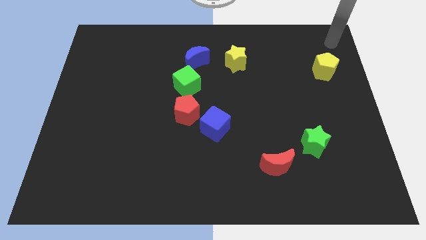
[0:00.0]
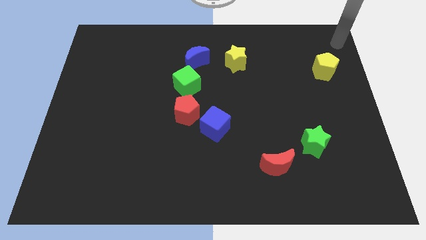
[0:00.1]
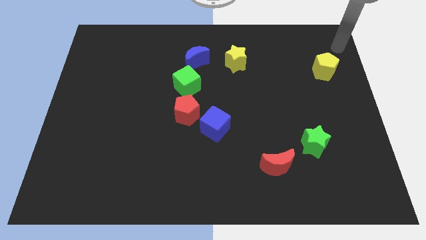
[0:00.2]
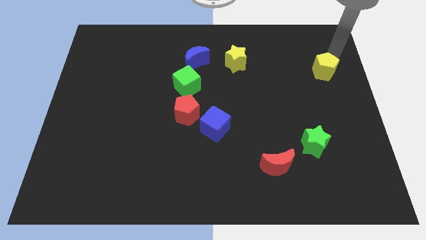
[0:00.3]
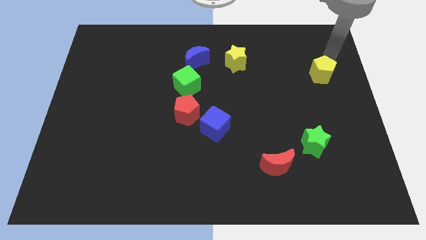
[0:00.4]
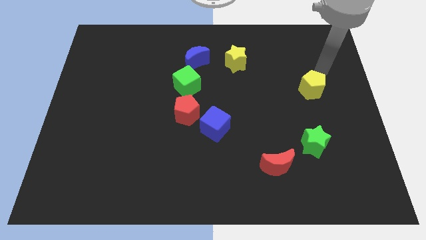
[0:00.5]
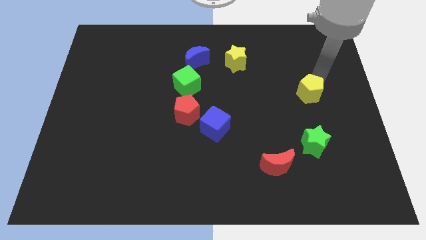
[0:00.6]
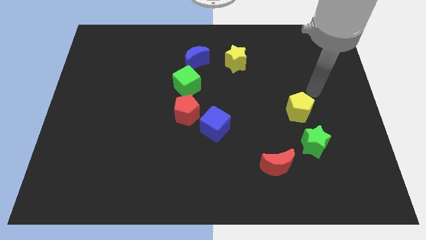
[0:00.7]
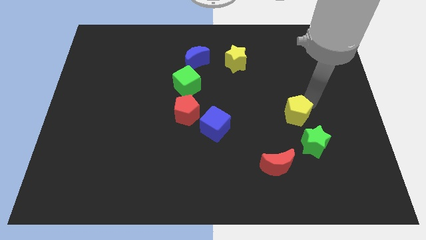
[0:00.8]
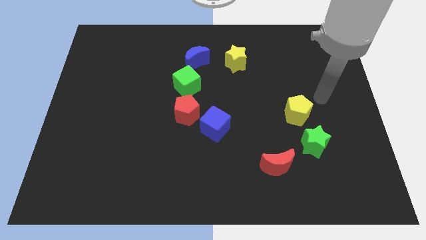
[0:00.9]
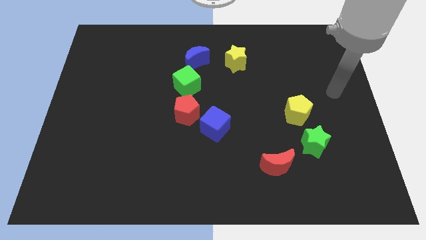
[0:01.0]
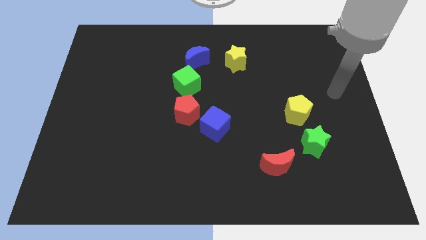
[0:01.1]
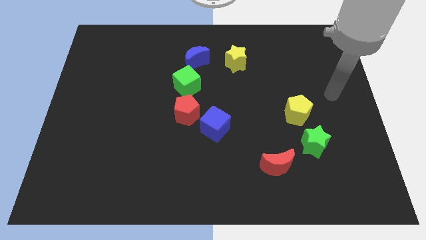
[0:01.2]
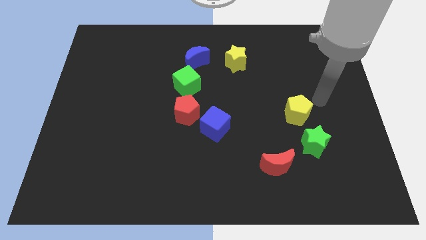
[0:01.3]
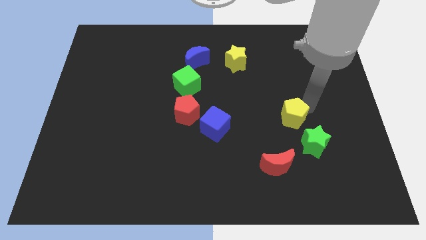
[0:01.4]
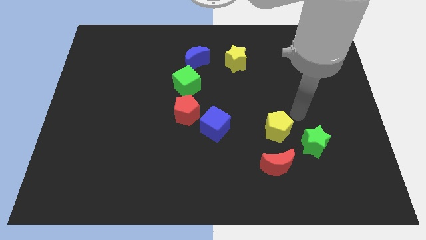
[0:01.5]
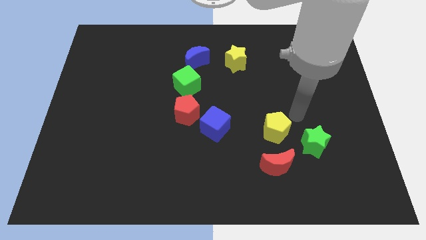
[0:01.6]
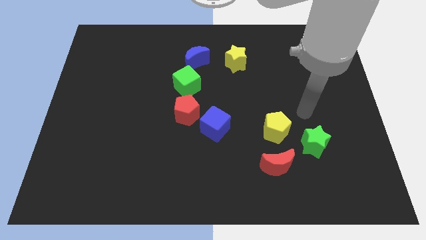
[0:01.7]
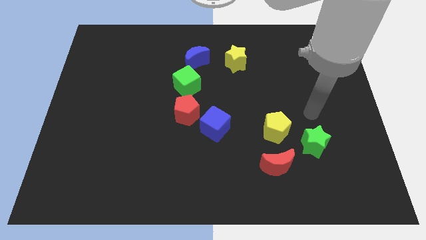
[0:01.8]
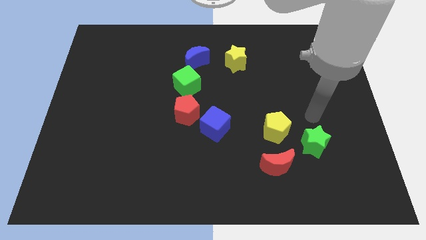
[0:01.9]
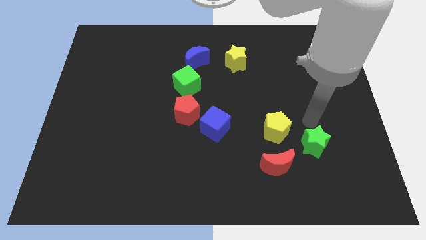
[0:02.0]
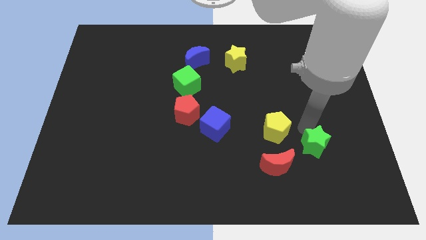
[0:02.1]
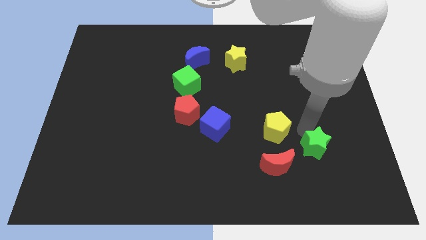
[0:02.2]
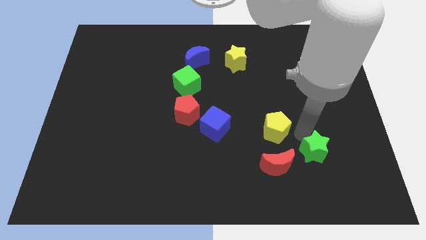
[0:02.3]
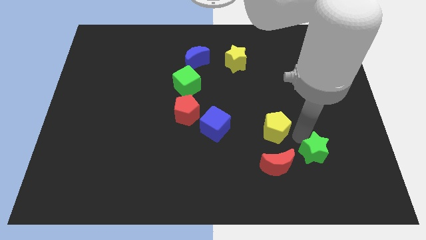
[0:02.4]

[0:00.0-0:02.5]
push the yellow pentagon right to the blue cube

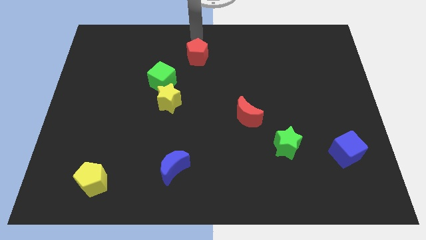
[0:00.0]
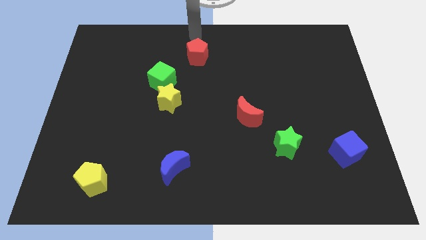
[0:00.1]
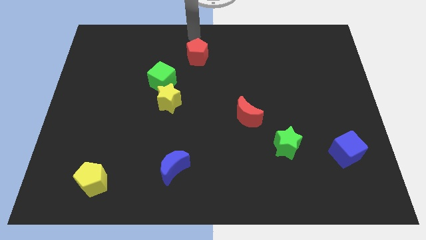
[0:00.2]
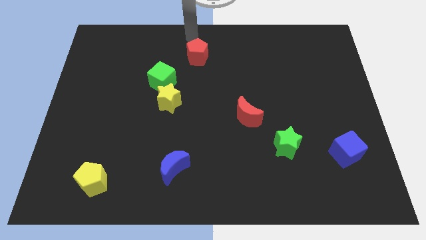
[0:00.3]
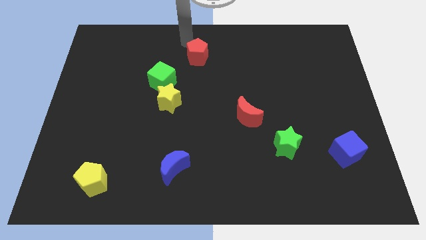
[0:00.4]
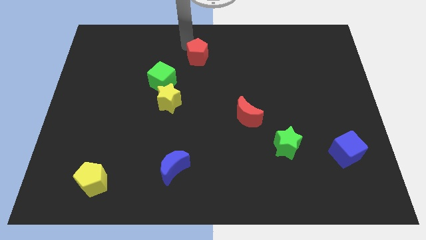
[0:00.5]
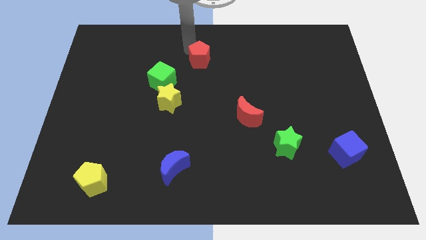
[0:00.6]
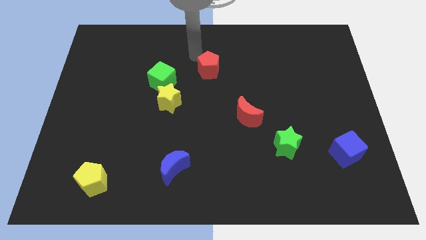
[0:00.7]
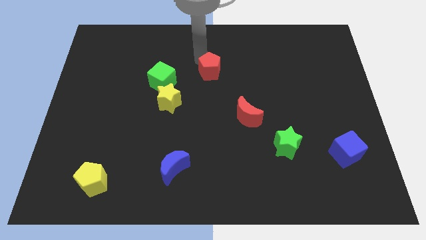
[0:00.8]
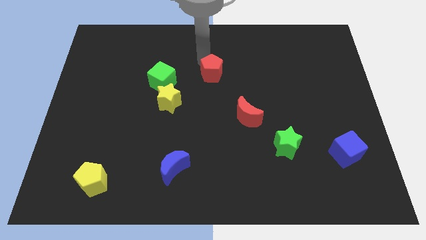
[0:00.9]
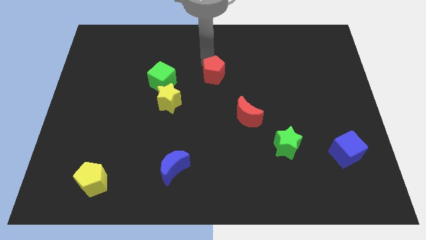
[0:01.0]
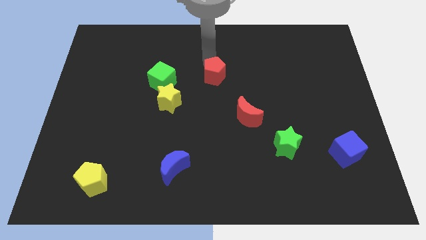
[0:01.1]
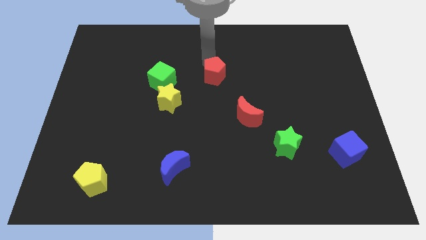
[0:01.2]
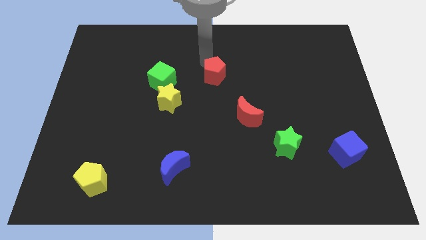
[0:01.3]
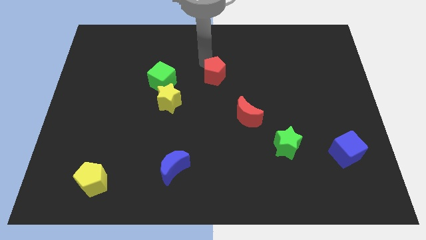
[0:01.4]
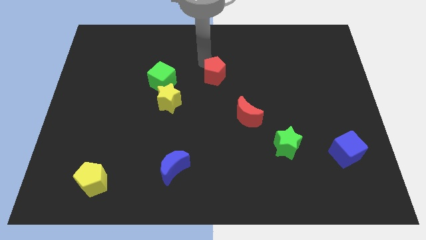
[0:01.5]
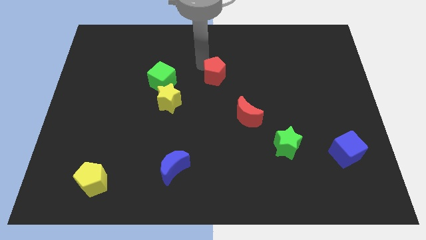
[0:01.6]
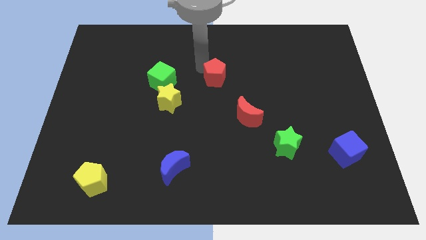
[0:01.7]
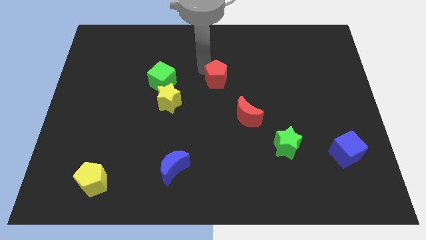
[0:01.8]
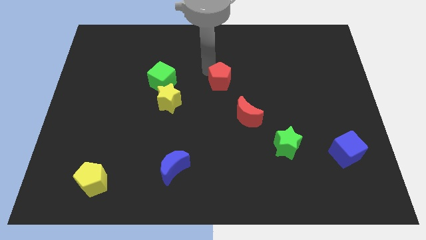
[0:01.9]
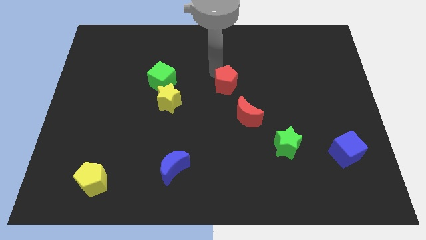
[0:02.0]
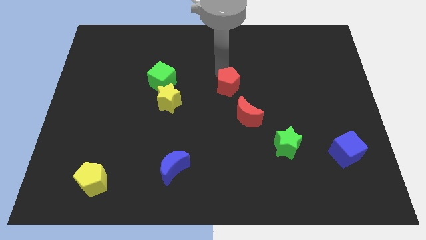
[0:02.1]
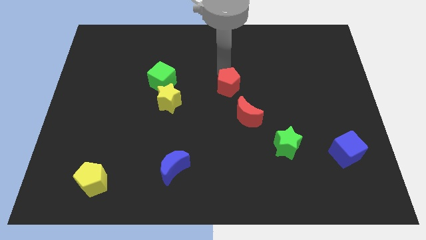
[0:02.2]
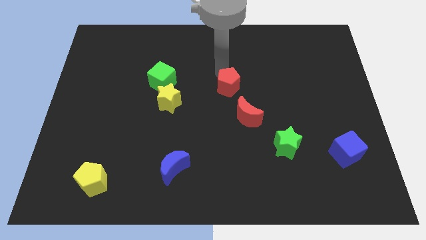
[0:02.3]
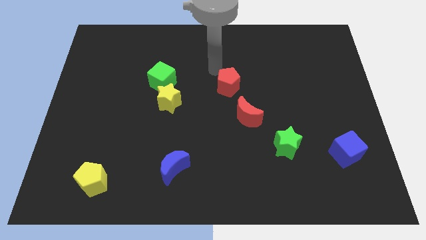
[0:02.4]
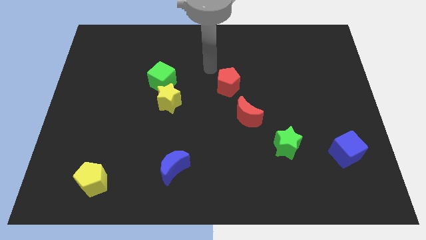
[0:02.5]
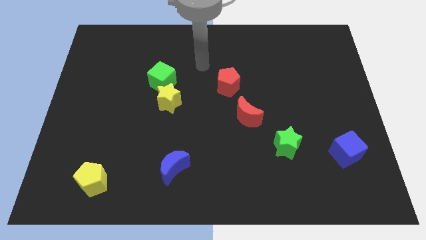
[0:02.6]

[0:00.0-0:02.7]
move the red pentagon near the red crescent

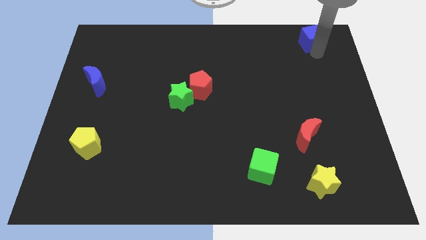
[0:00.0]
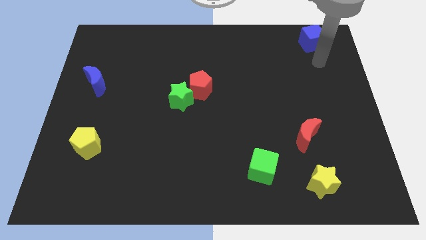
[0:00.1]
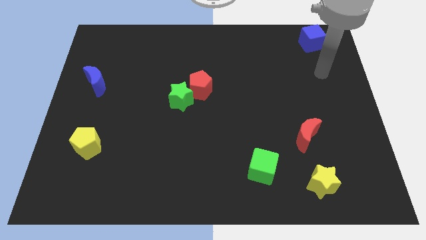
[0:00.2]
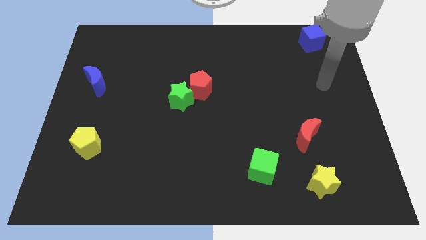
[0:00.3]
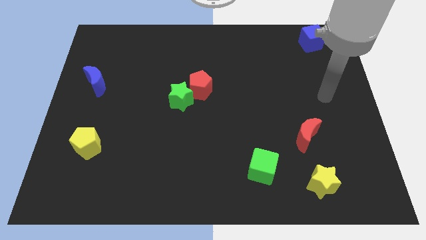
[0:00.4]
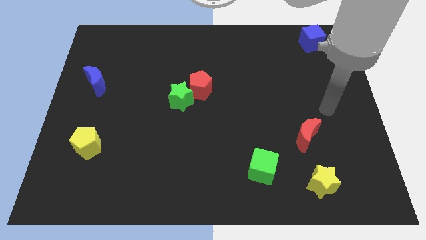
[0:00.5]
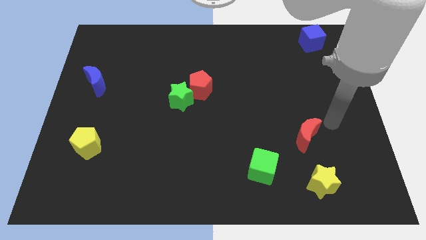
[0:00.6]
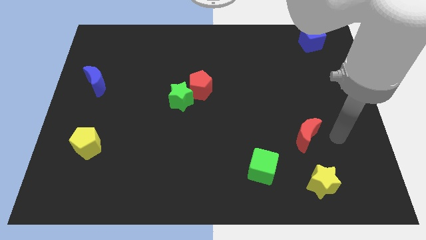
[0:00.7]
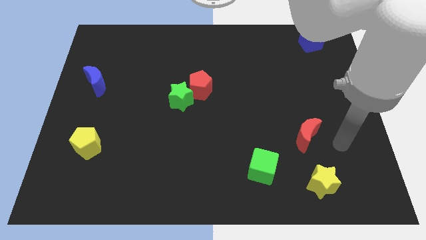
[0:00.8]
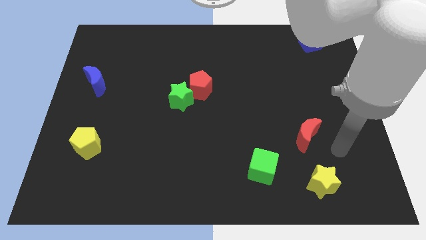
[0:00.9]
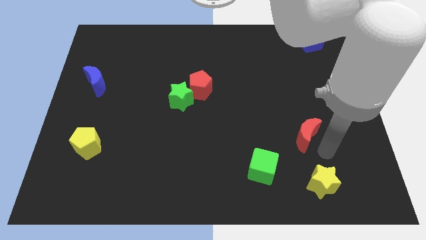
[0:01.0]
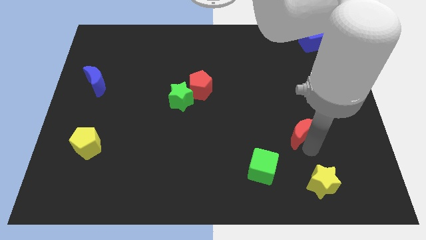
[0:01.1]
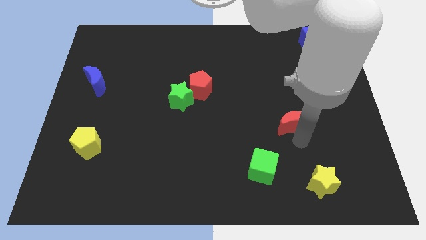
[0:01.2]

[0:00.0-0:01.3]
move your arm away from the blue cube

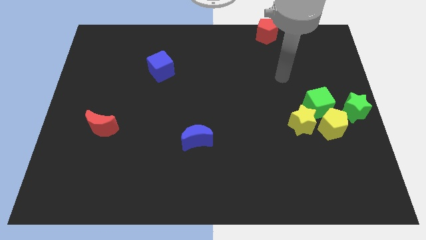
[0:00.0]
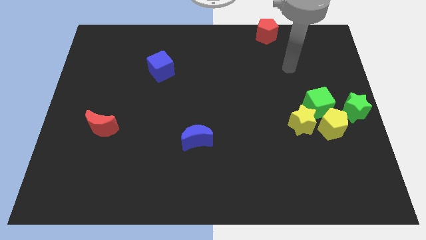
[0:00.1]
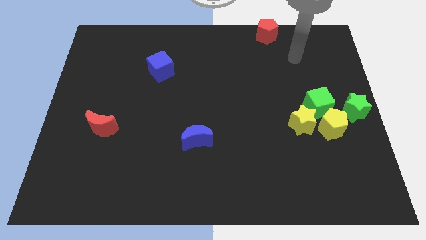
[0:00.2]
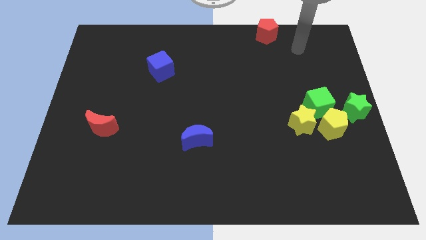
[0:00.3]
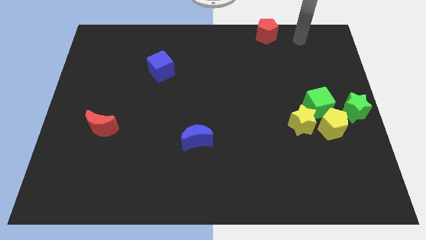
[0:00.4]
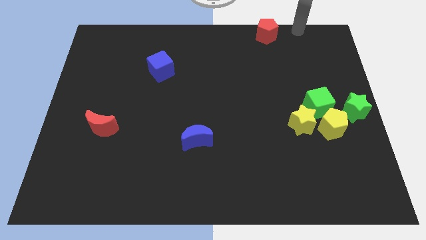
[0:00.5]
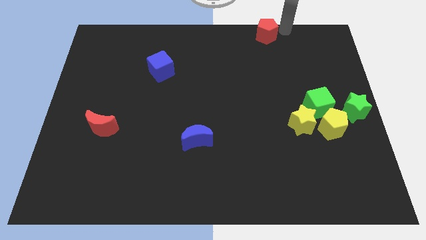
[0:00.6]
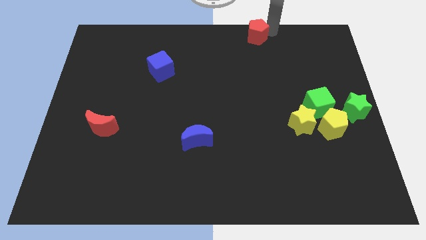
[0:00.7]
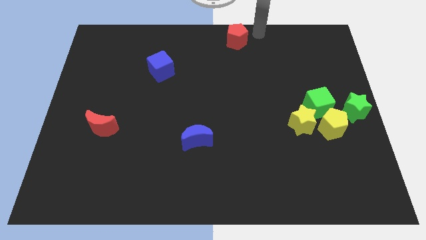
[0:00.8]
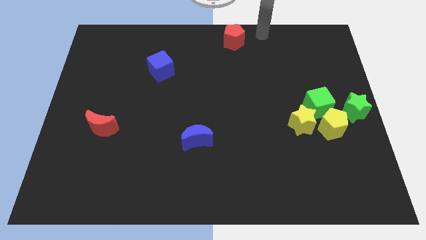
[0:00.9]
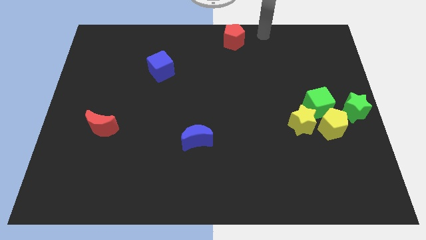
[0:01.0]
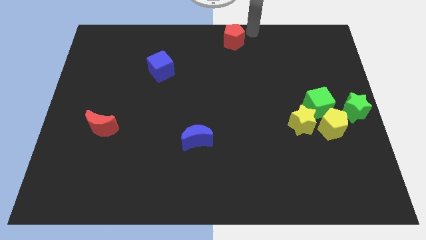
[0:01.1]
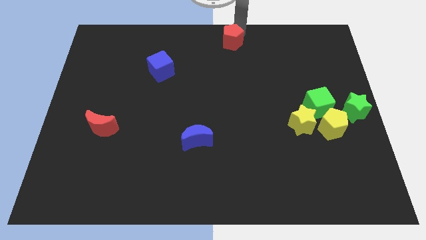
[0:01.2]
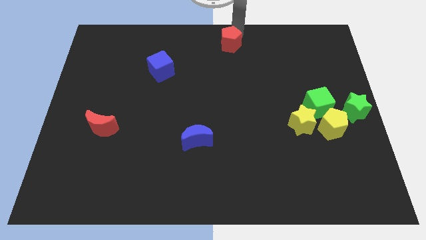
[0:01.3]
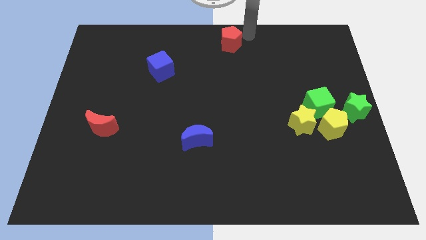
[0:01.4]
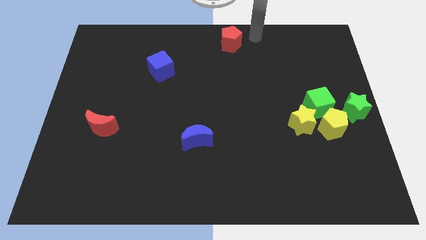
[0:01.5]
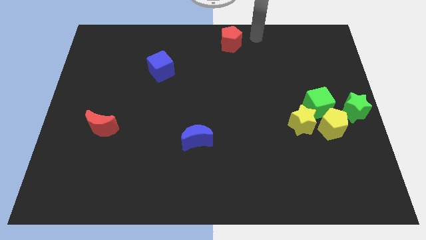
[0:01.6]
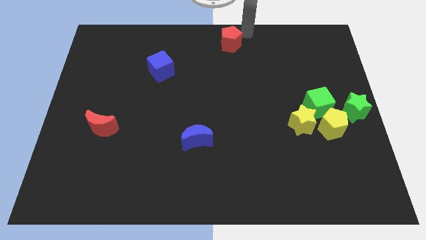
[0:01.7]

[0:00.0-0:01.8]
move the red pentagon towards the top center of the board

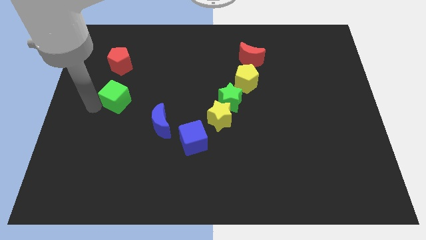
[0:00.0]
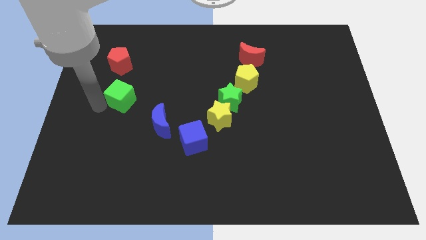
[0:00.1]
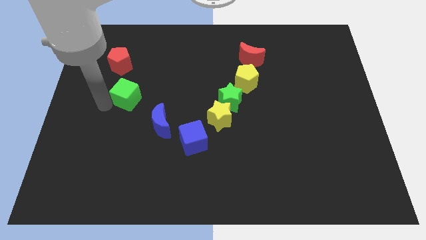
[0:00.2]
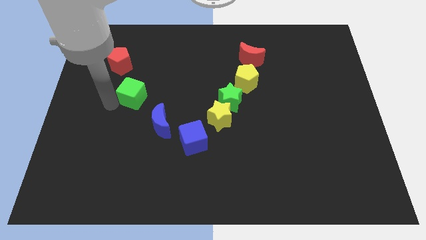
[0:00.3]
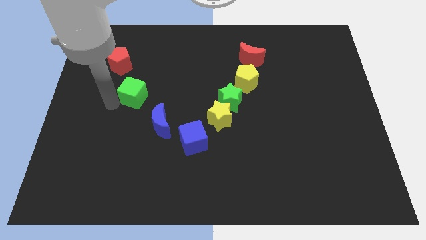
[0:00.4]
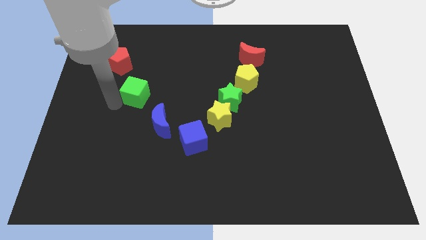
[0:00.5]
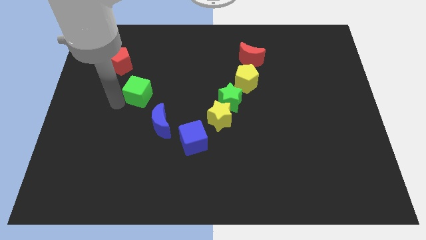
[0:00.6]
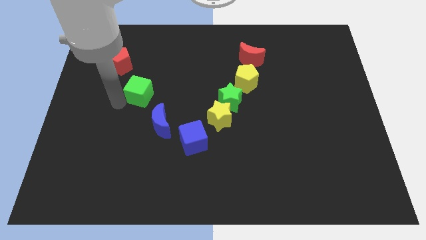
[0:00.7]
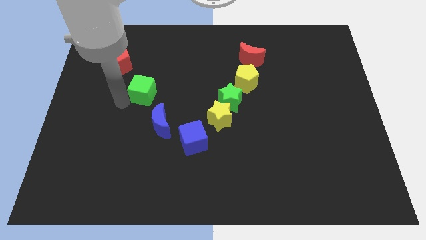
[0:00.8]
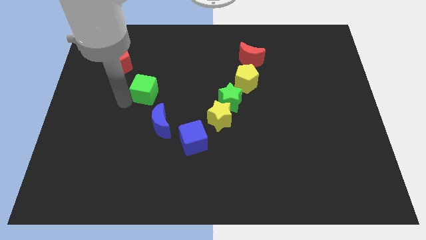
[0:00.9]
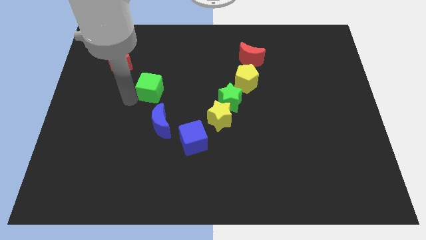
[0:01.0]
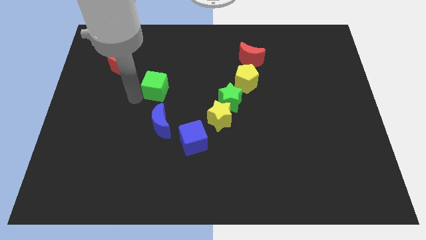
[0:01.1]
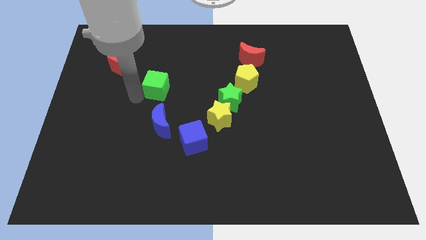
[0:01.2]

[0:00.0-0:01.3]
place the green cube to the top of the blue crescent
